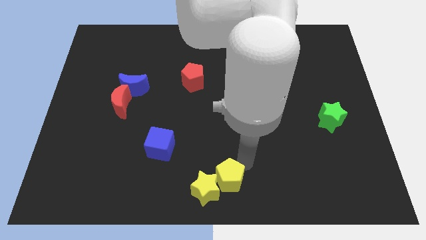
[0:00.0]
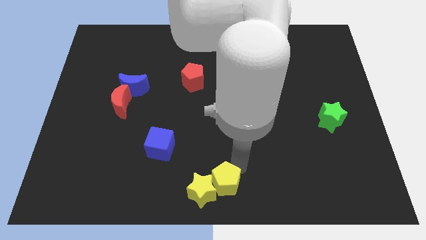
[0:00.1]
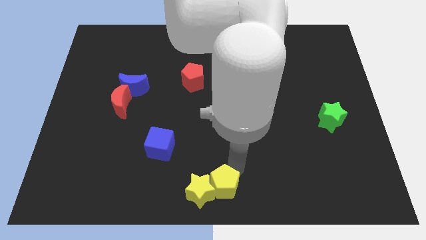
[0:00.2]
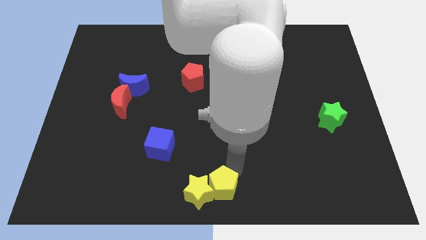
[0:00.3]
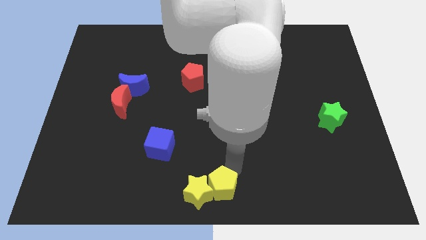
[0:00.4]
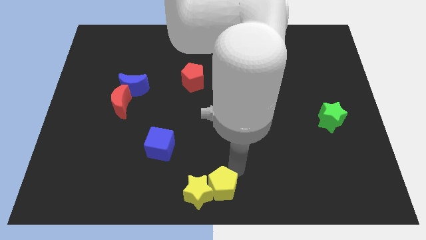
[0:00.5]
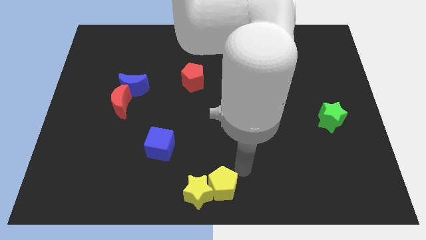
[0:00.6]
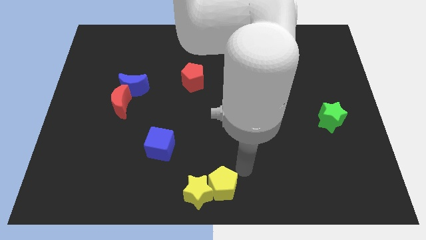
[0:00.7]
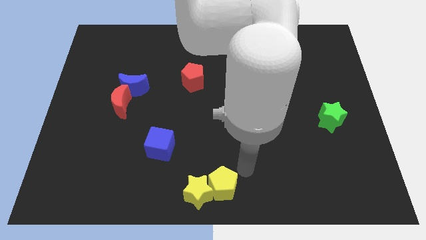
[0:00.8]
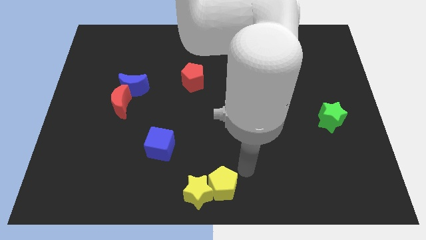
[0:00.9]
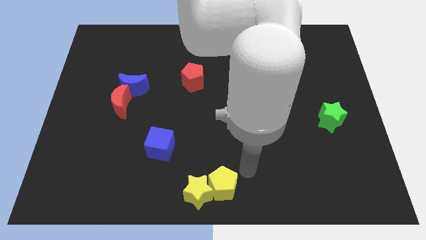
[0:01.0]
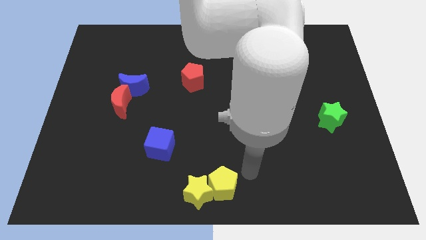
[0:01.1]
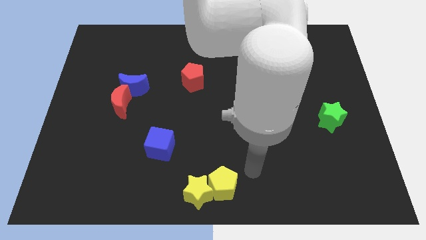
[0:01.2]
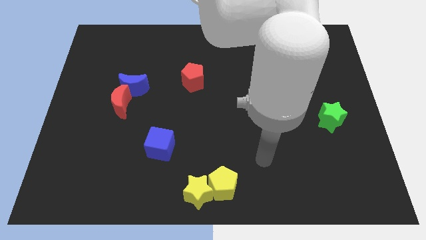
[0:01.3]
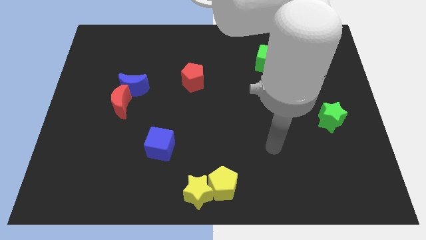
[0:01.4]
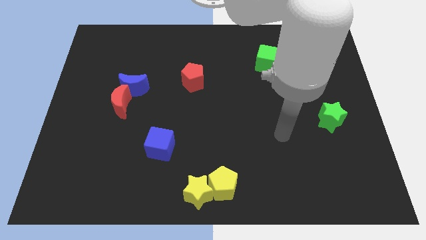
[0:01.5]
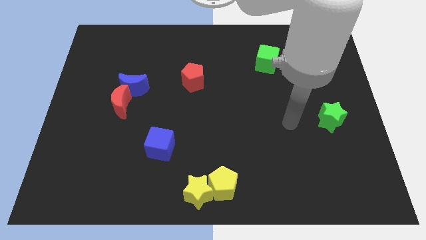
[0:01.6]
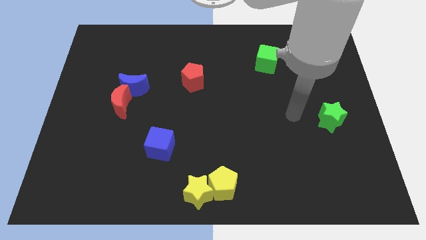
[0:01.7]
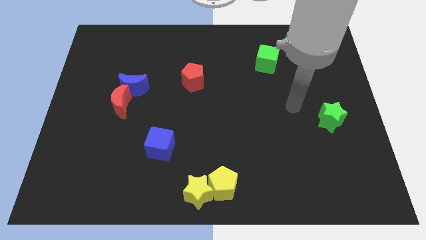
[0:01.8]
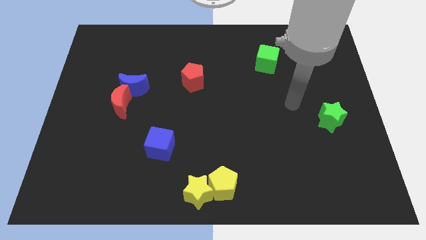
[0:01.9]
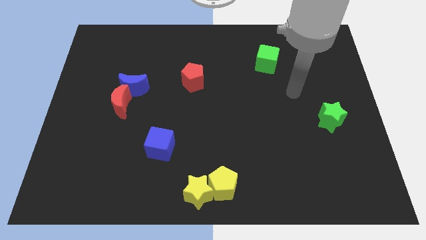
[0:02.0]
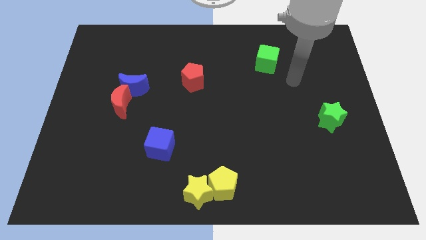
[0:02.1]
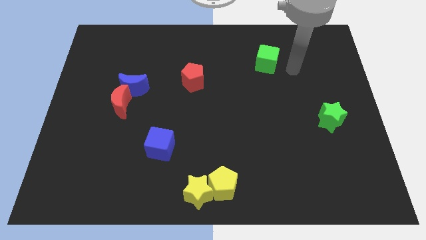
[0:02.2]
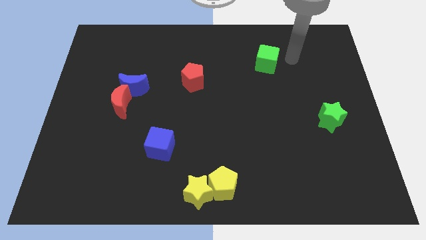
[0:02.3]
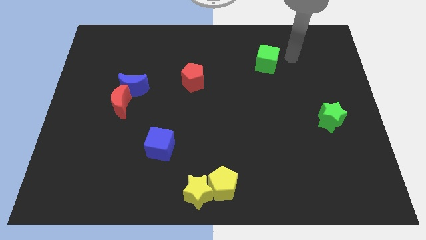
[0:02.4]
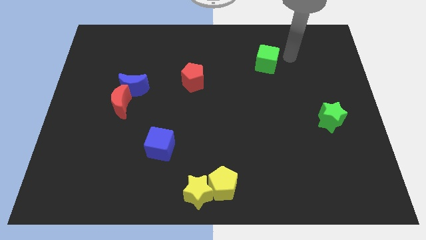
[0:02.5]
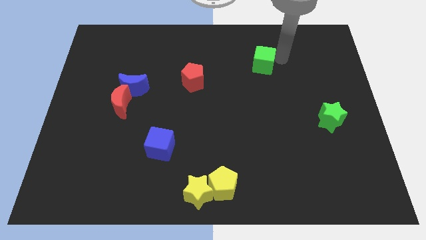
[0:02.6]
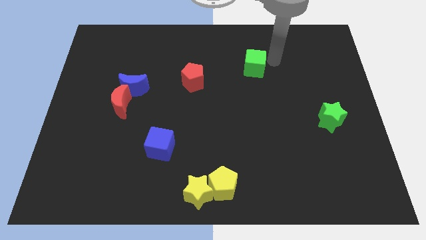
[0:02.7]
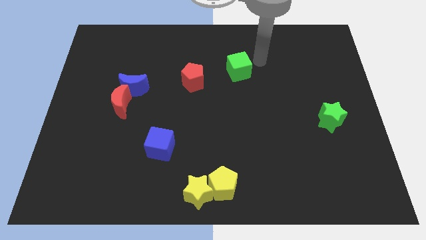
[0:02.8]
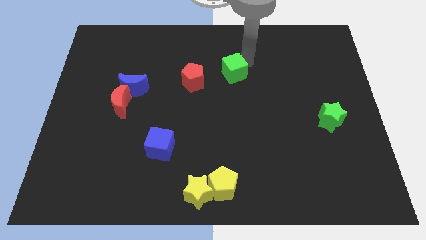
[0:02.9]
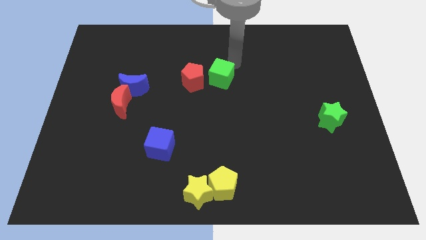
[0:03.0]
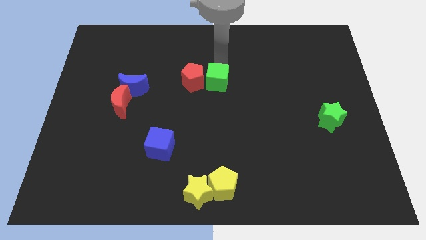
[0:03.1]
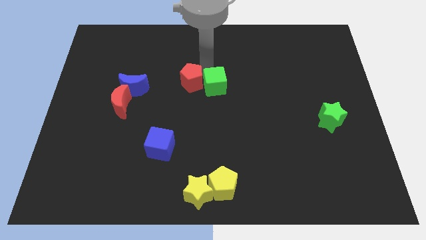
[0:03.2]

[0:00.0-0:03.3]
place green cube above yellow pentagon

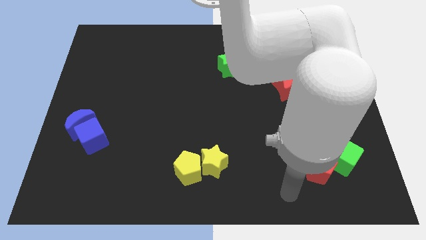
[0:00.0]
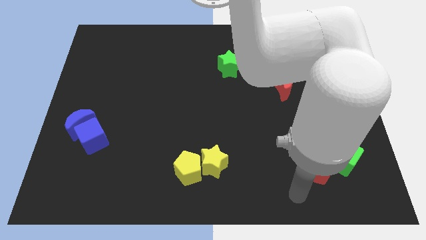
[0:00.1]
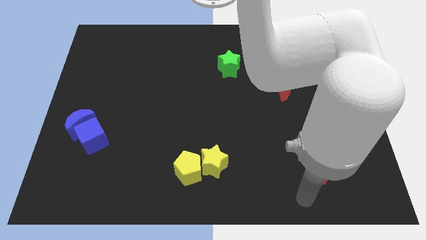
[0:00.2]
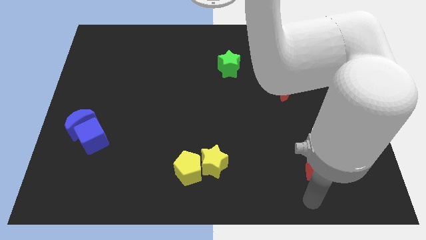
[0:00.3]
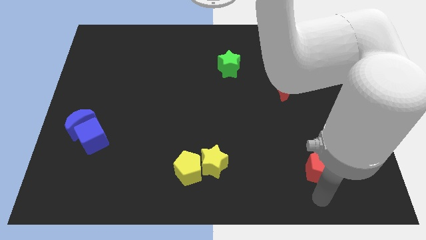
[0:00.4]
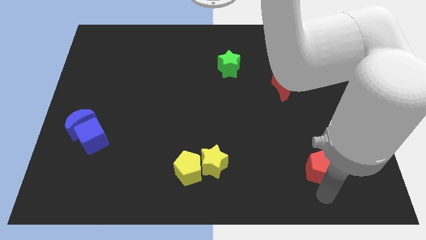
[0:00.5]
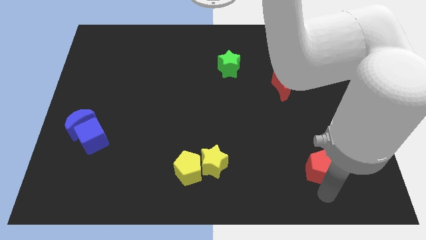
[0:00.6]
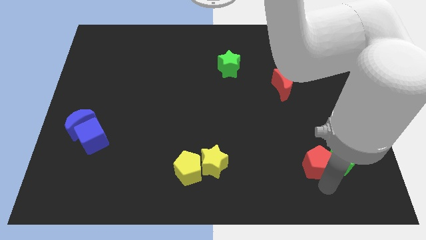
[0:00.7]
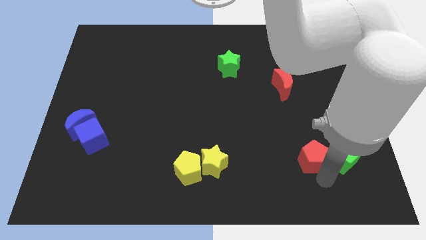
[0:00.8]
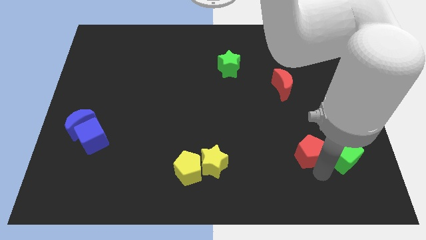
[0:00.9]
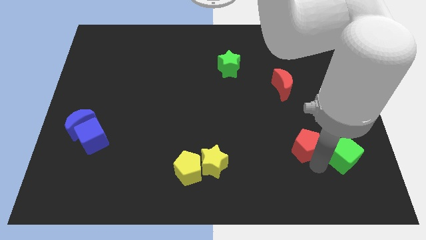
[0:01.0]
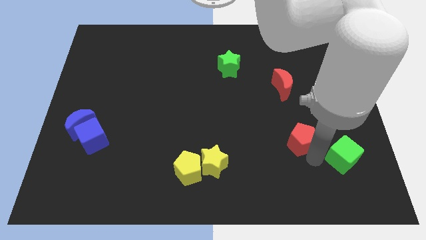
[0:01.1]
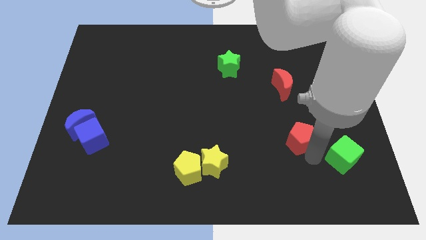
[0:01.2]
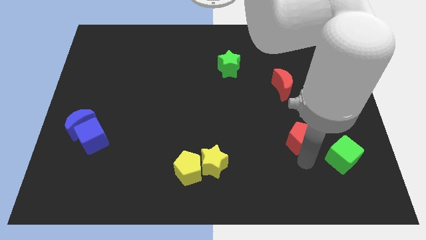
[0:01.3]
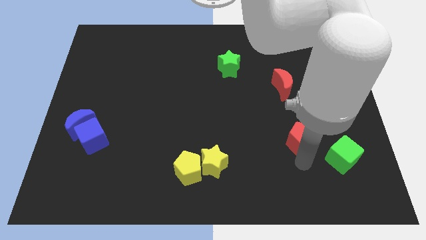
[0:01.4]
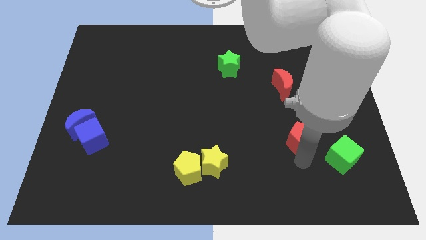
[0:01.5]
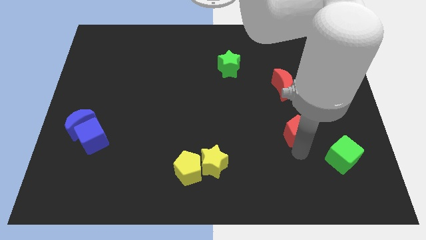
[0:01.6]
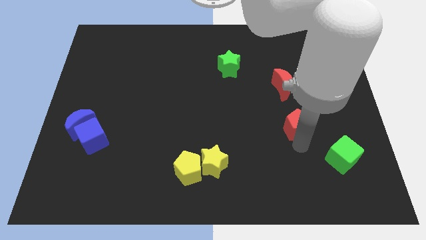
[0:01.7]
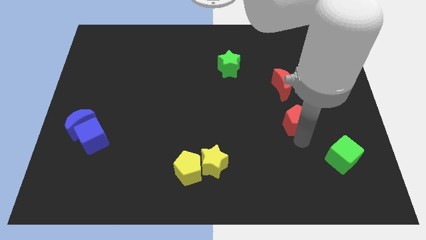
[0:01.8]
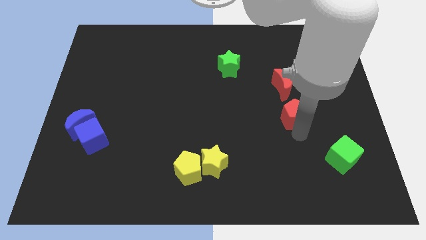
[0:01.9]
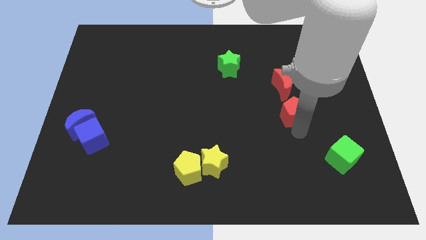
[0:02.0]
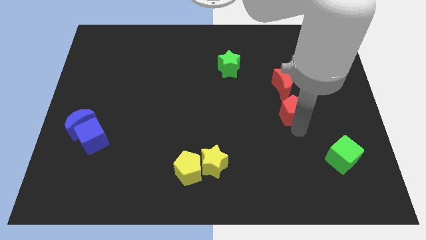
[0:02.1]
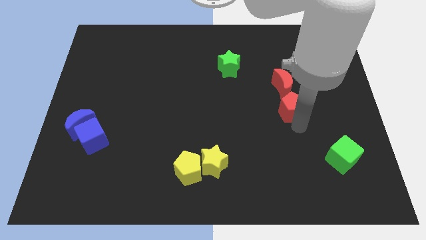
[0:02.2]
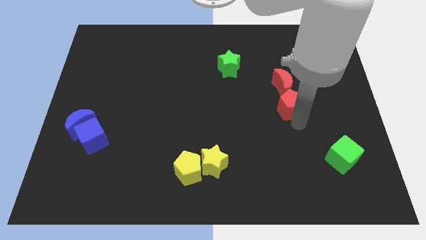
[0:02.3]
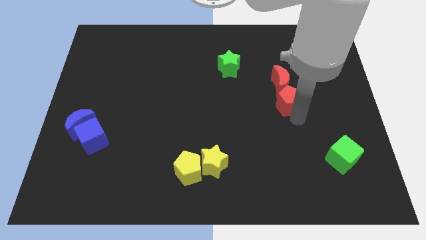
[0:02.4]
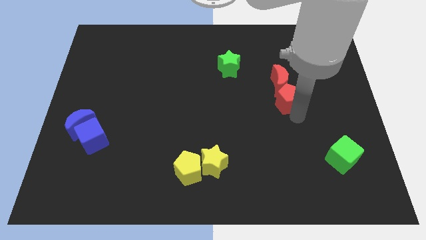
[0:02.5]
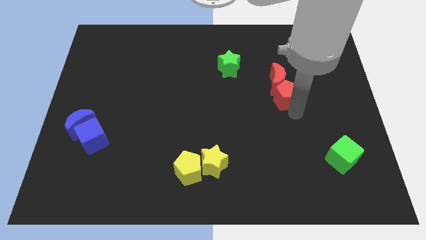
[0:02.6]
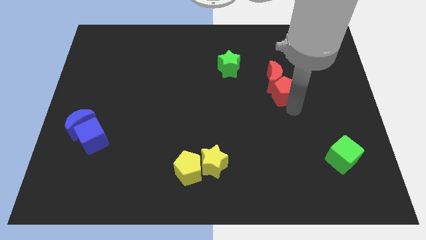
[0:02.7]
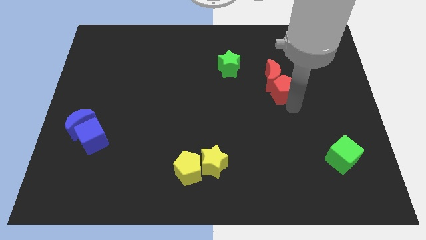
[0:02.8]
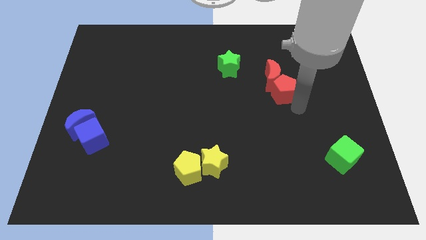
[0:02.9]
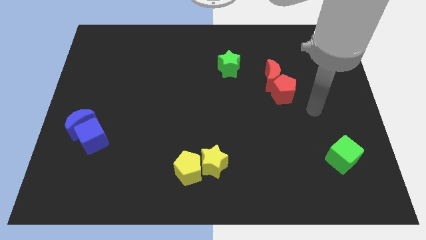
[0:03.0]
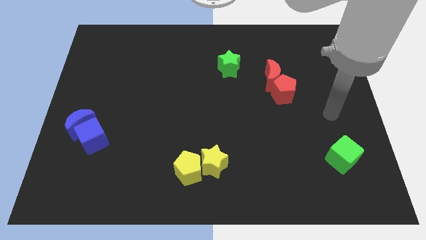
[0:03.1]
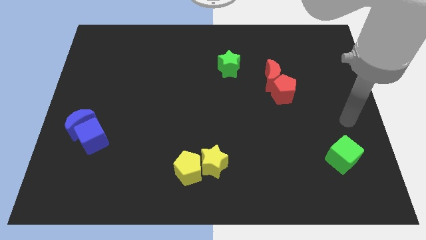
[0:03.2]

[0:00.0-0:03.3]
move the red pentagon into the red moon

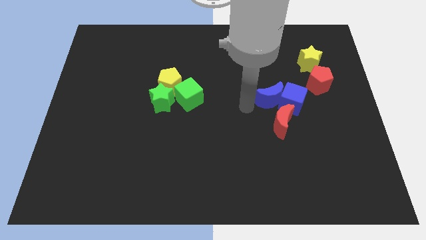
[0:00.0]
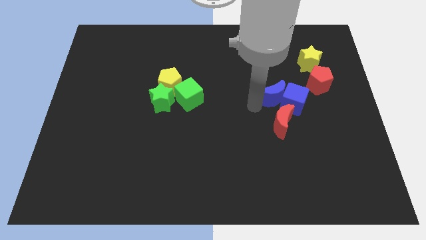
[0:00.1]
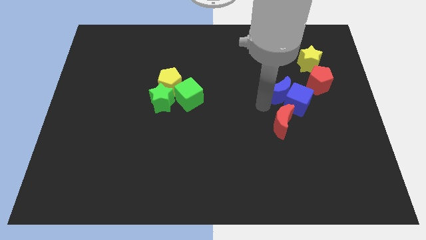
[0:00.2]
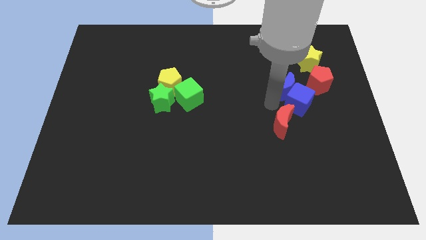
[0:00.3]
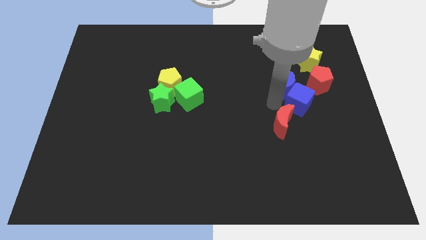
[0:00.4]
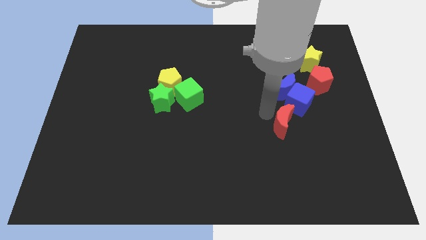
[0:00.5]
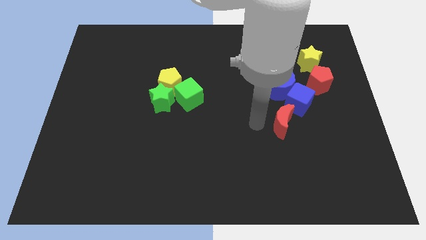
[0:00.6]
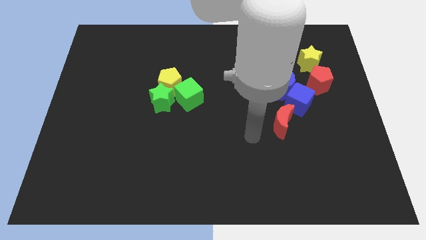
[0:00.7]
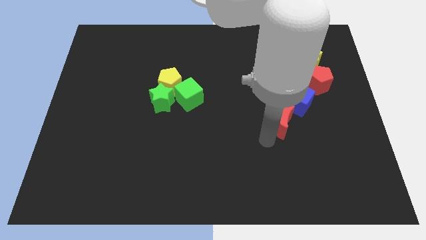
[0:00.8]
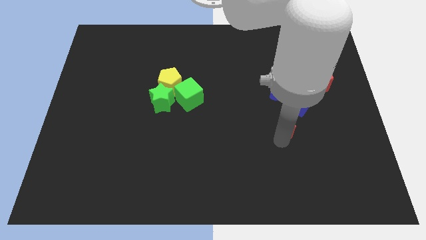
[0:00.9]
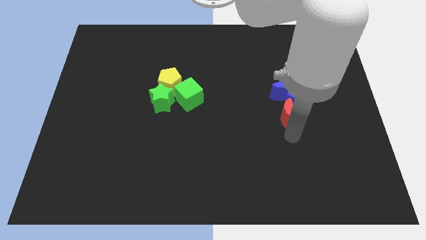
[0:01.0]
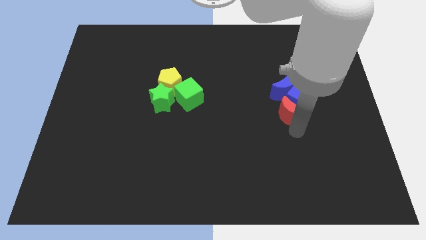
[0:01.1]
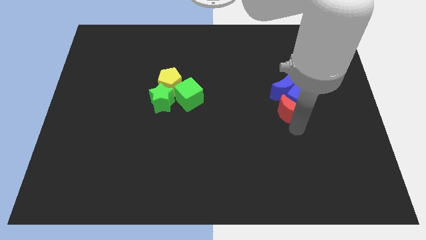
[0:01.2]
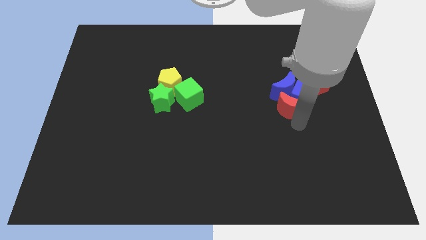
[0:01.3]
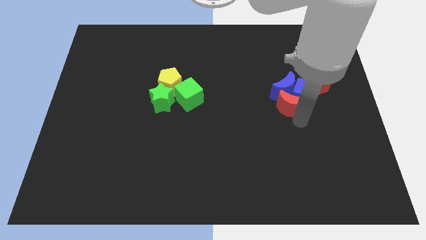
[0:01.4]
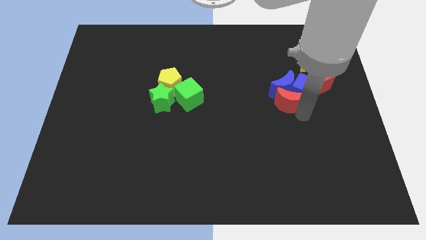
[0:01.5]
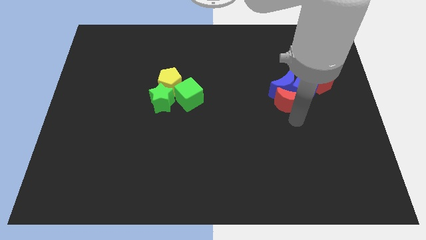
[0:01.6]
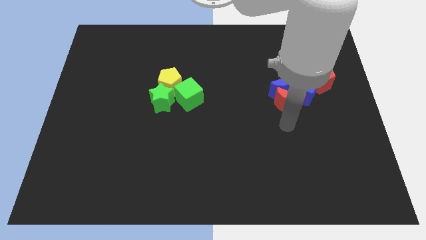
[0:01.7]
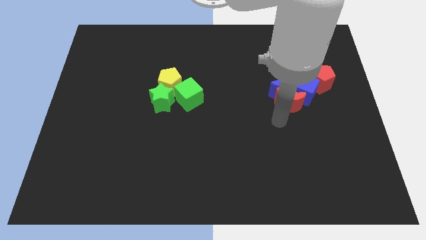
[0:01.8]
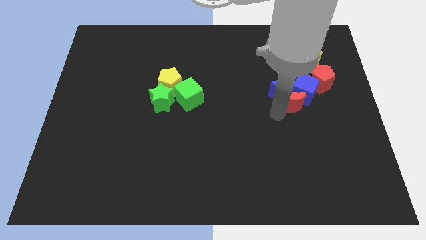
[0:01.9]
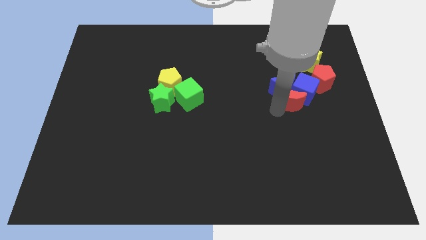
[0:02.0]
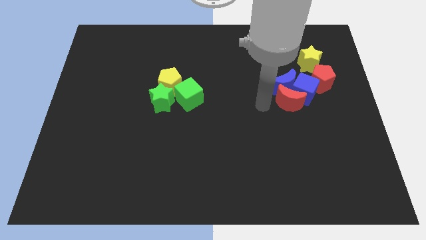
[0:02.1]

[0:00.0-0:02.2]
move the red crescent into the blue blocks

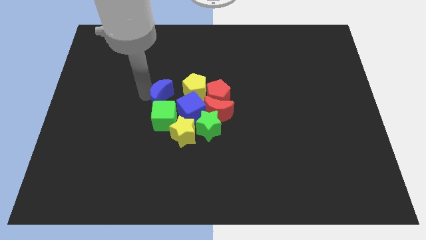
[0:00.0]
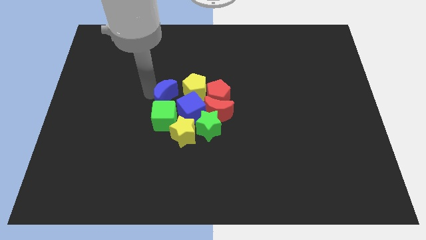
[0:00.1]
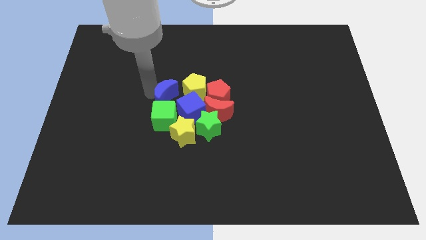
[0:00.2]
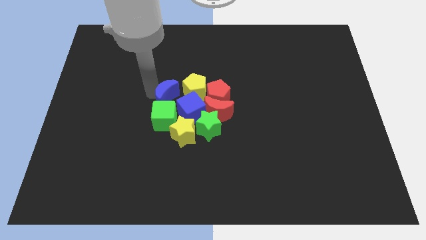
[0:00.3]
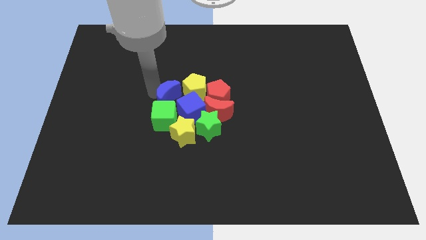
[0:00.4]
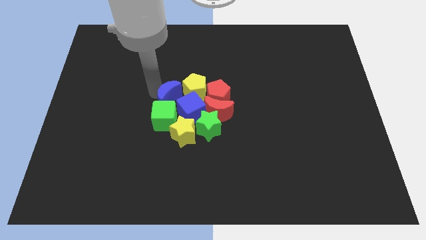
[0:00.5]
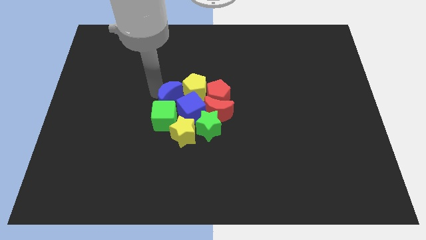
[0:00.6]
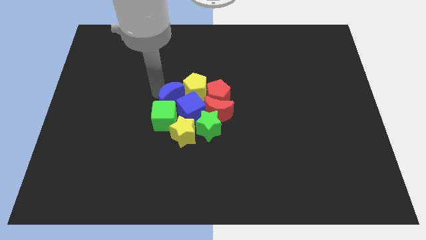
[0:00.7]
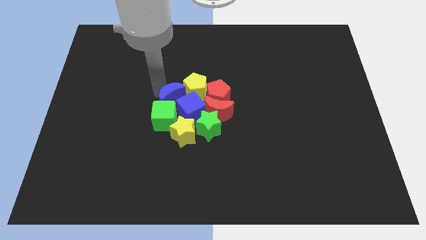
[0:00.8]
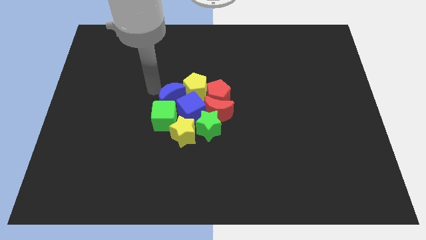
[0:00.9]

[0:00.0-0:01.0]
push blue moon into the group of blocks
